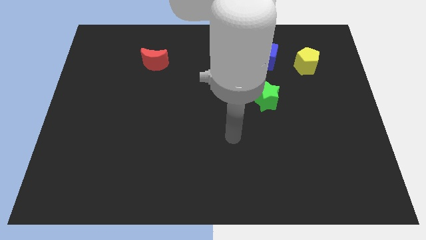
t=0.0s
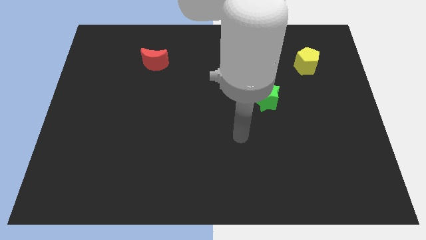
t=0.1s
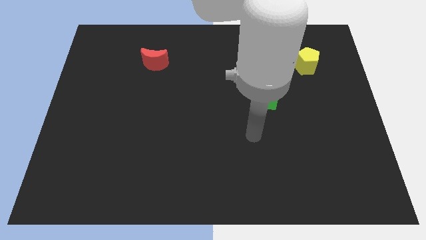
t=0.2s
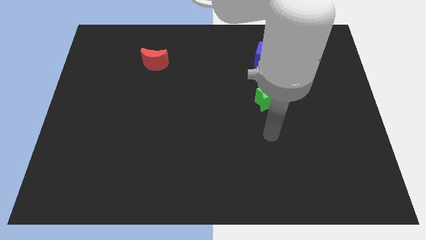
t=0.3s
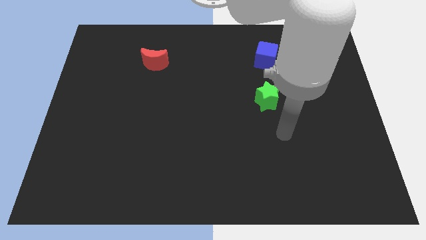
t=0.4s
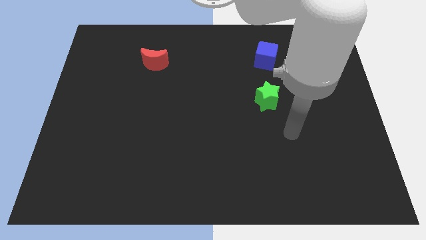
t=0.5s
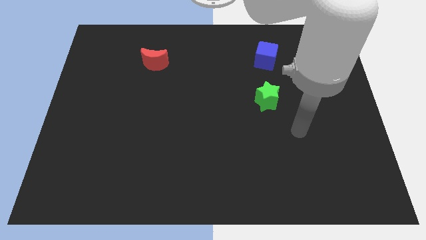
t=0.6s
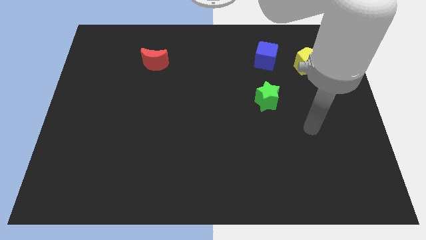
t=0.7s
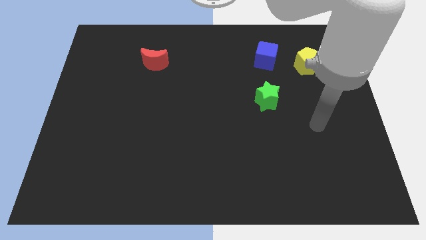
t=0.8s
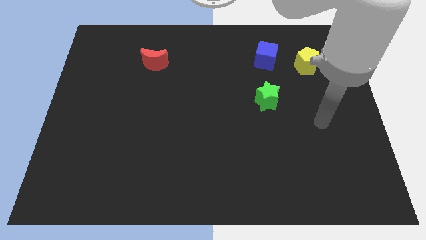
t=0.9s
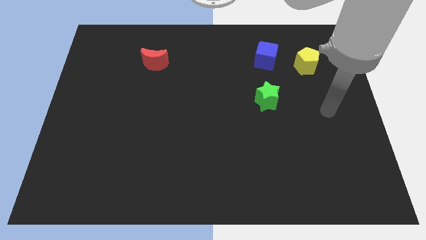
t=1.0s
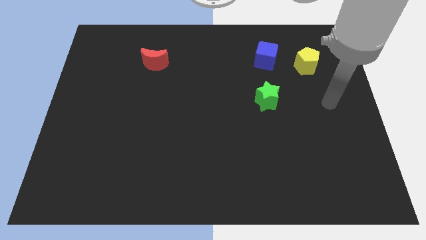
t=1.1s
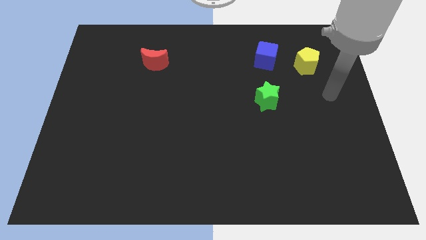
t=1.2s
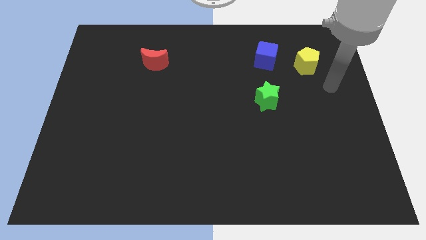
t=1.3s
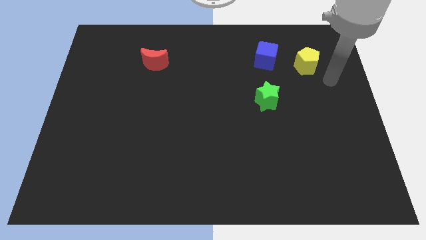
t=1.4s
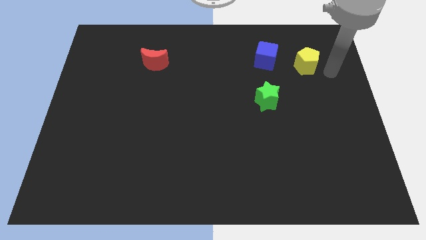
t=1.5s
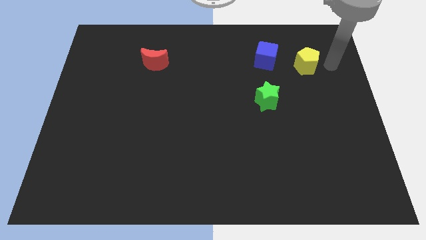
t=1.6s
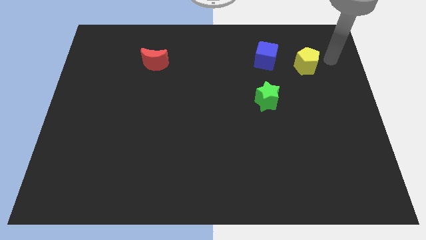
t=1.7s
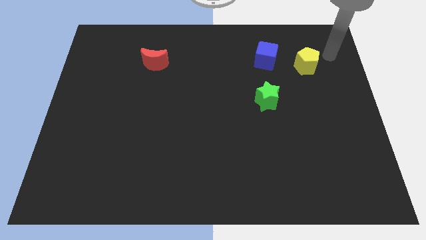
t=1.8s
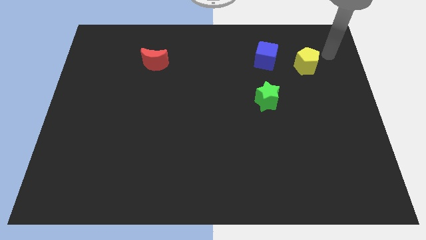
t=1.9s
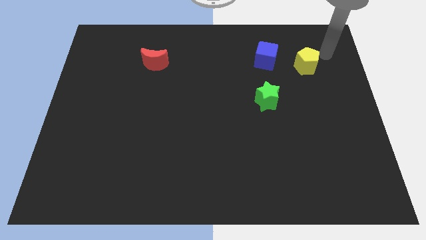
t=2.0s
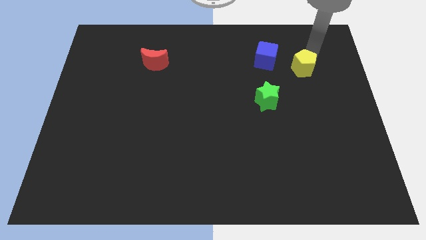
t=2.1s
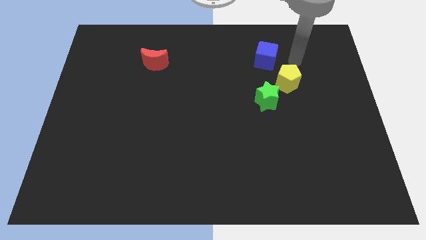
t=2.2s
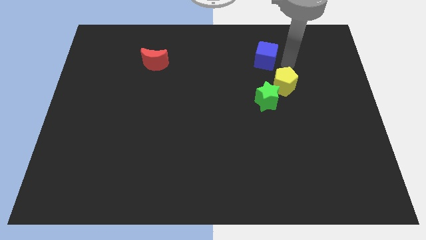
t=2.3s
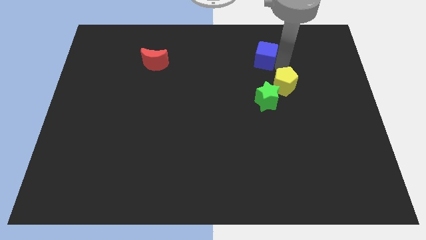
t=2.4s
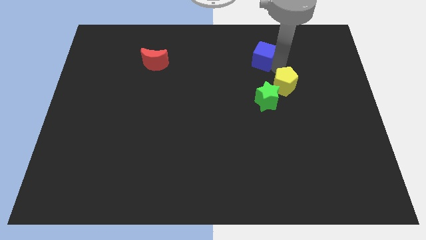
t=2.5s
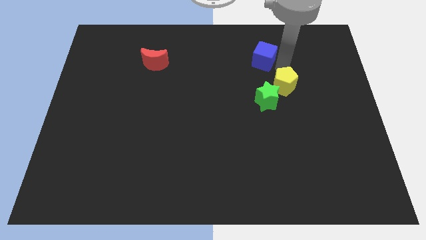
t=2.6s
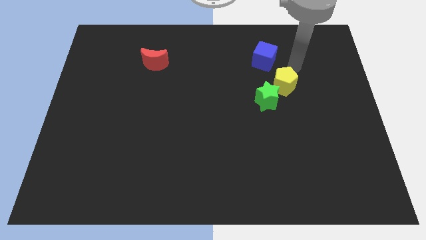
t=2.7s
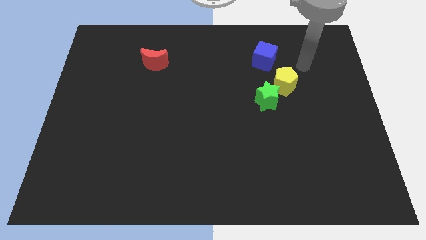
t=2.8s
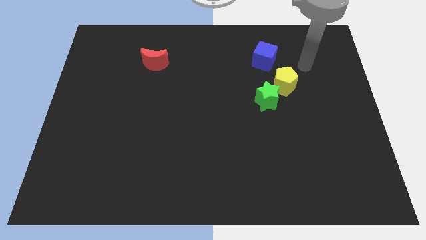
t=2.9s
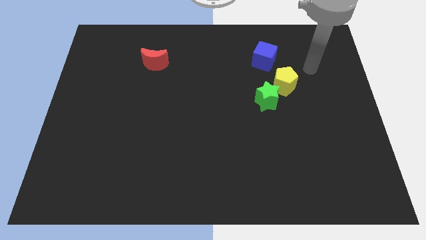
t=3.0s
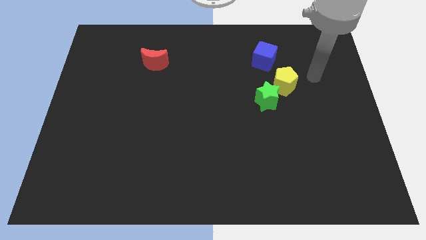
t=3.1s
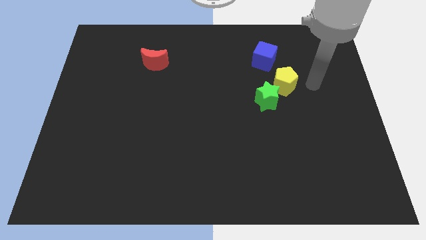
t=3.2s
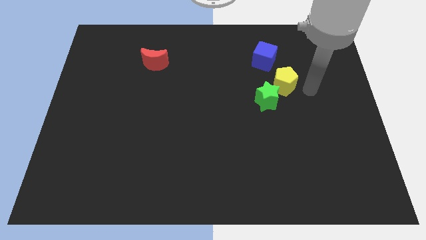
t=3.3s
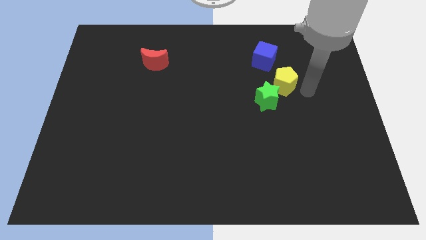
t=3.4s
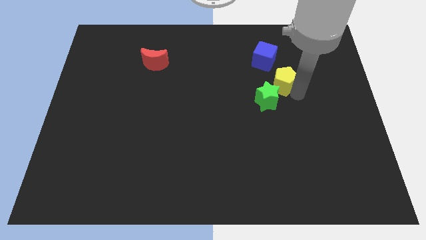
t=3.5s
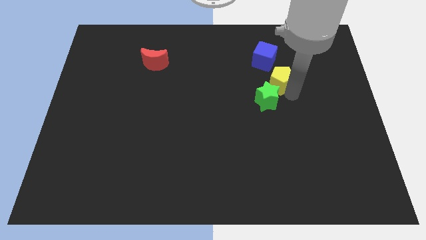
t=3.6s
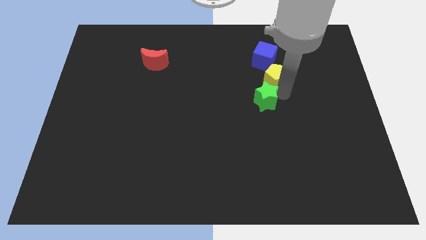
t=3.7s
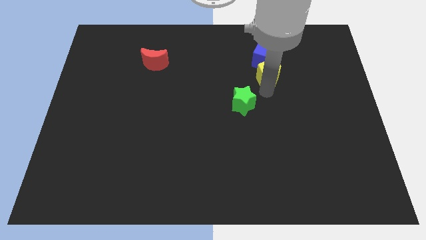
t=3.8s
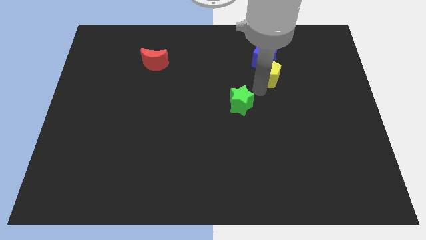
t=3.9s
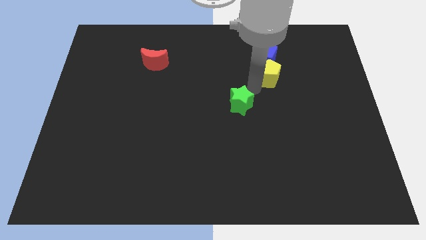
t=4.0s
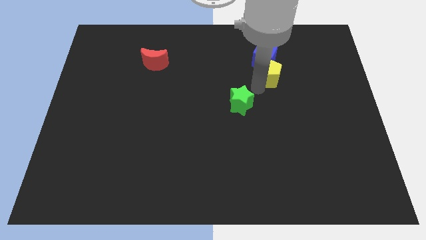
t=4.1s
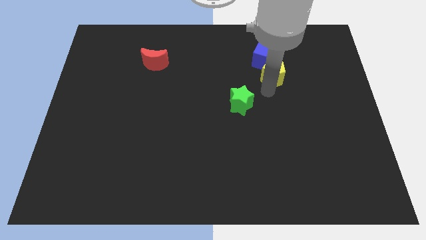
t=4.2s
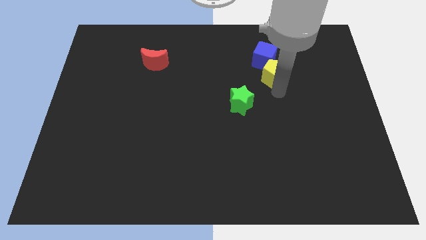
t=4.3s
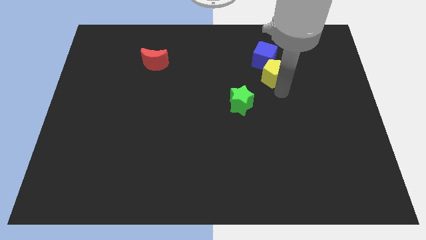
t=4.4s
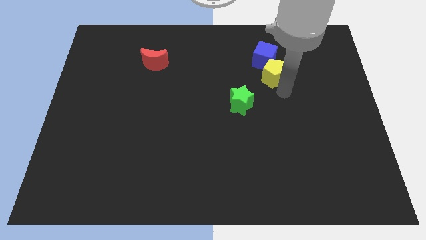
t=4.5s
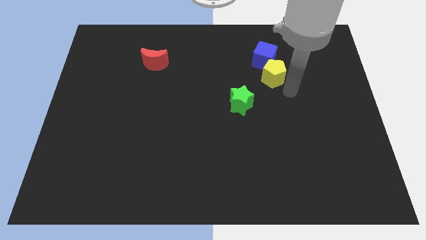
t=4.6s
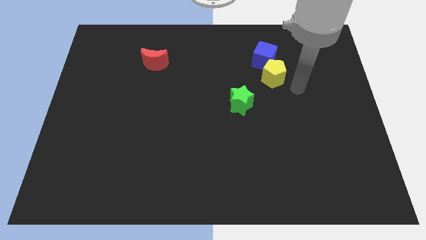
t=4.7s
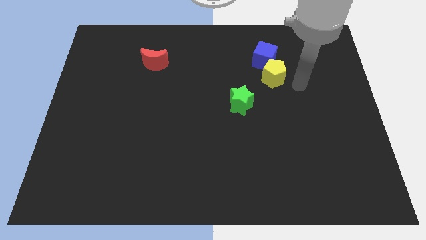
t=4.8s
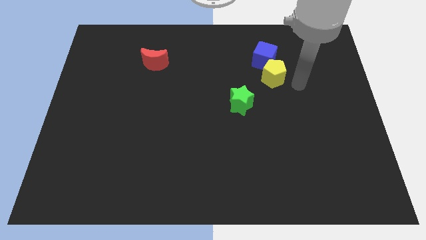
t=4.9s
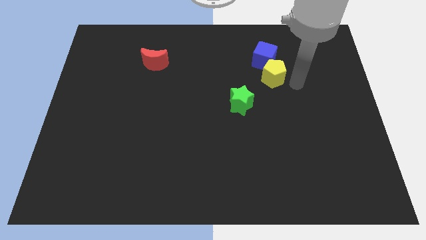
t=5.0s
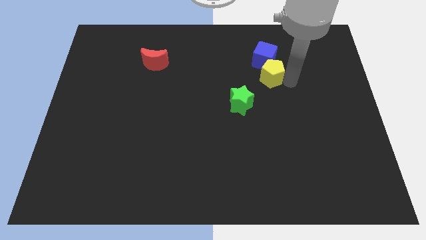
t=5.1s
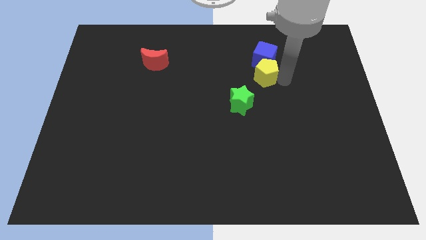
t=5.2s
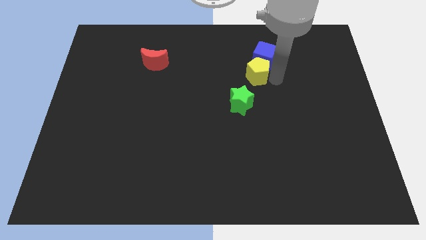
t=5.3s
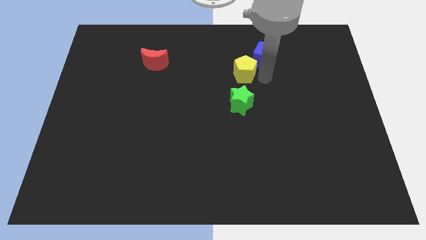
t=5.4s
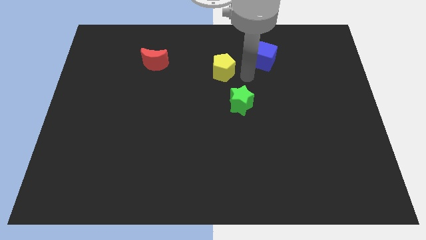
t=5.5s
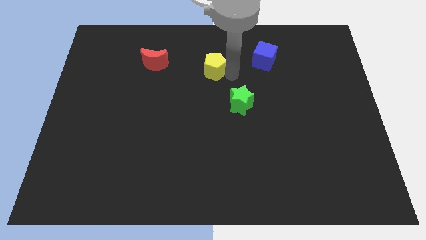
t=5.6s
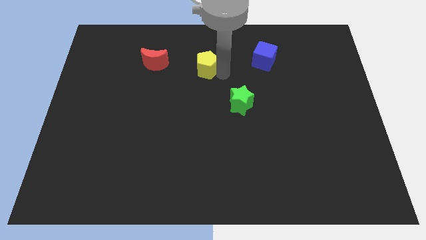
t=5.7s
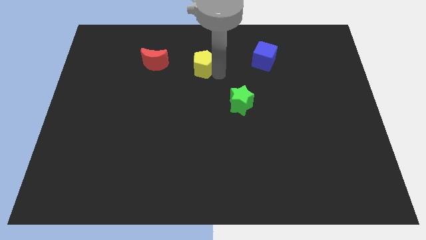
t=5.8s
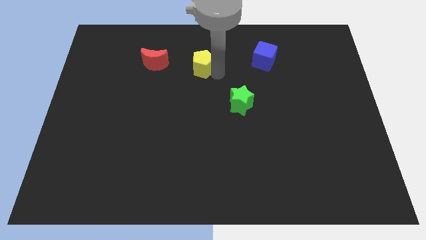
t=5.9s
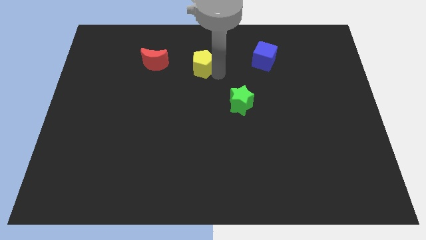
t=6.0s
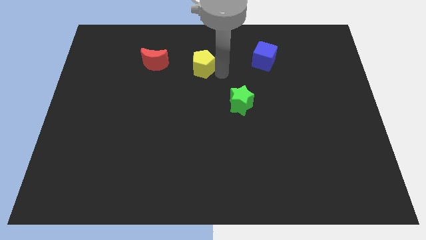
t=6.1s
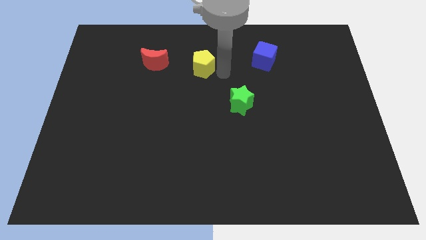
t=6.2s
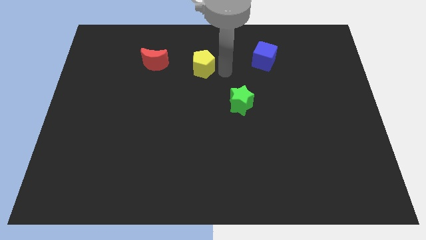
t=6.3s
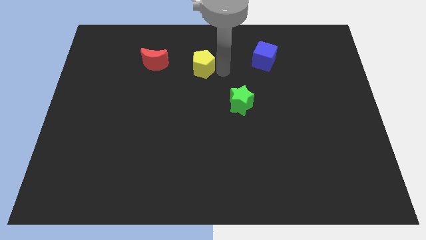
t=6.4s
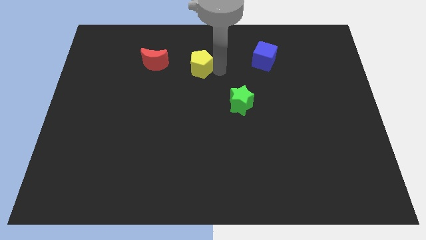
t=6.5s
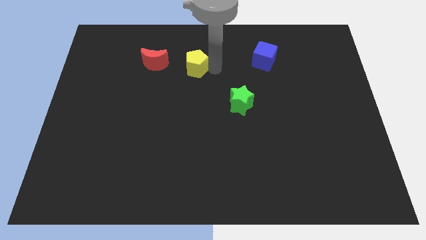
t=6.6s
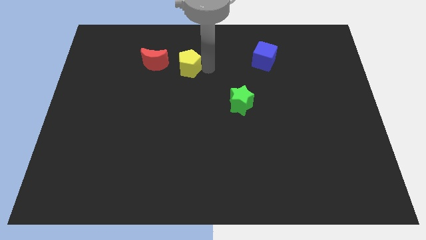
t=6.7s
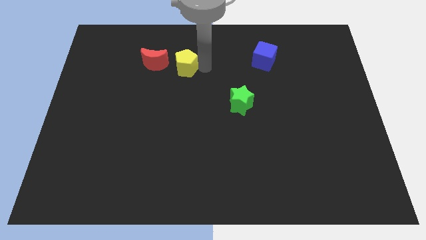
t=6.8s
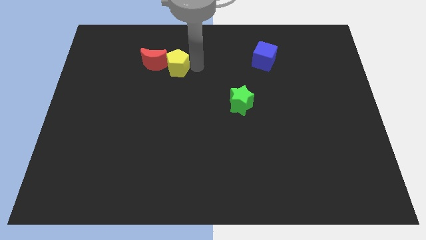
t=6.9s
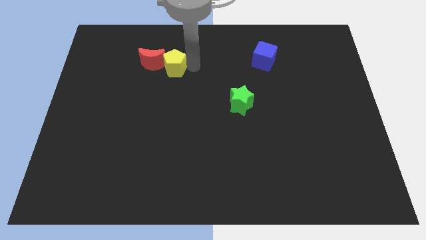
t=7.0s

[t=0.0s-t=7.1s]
put the yellow block towards the moon

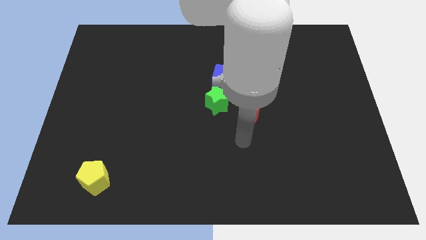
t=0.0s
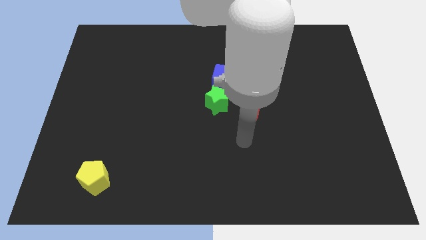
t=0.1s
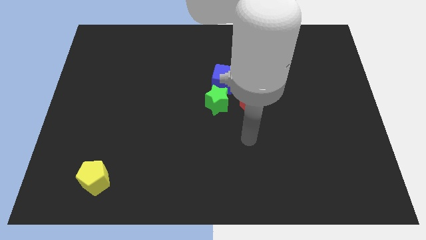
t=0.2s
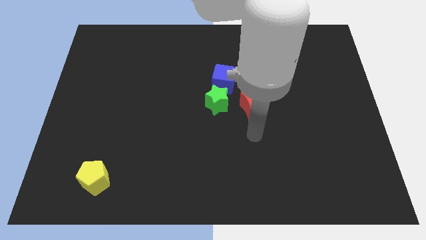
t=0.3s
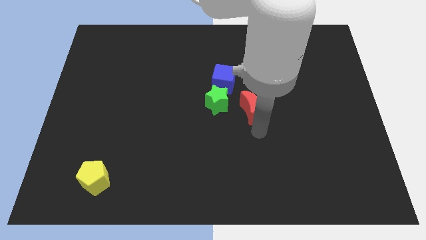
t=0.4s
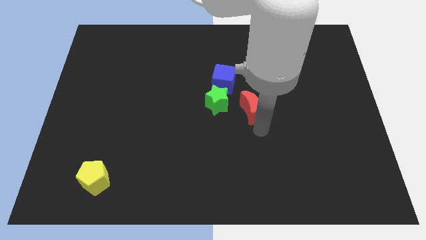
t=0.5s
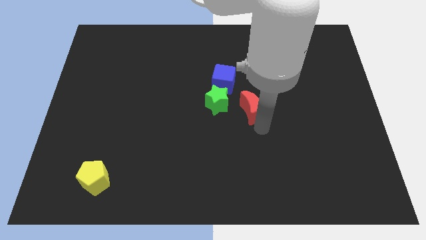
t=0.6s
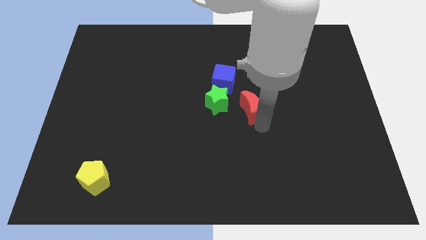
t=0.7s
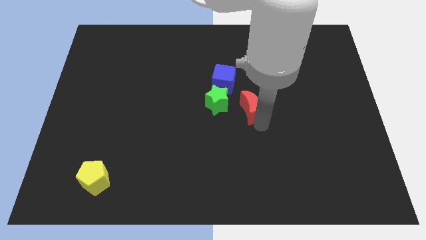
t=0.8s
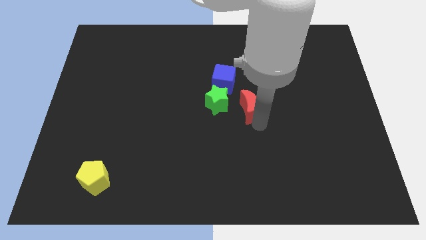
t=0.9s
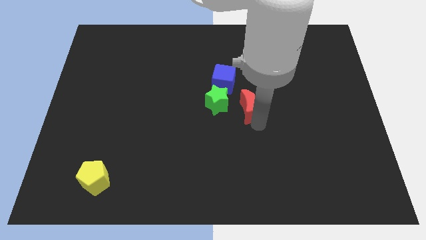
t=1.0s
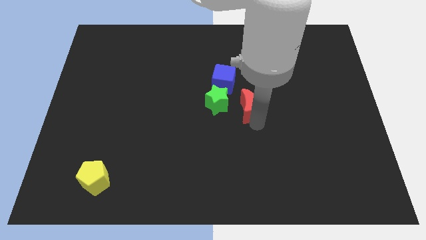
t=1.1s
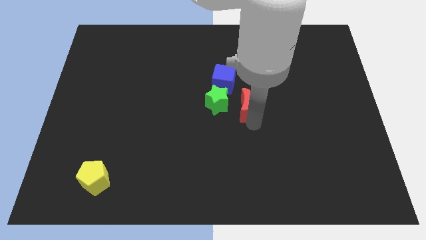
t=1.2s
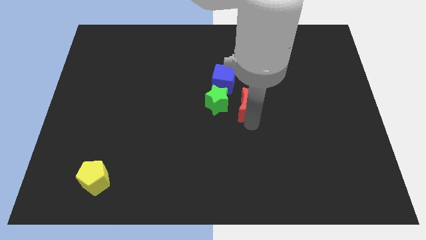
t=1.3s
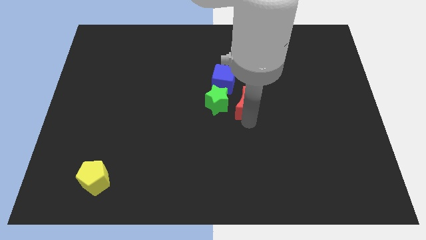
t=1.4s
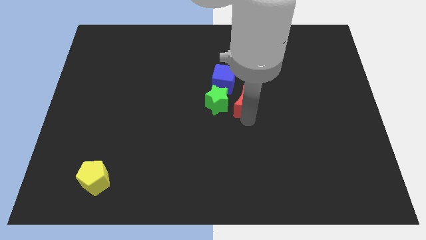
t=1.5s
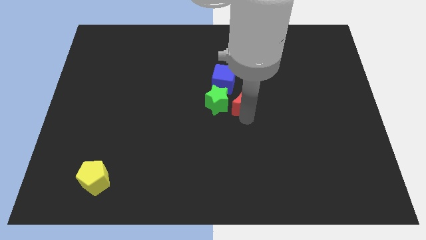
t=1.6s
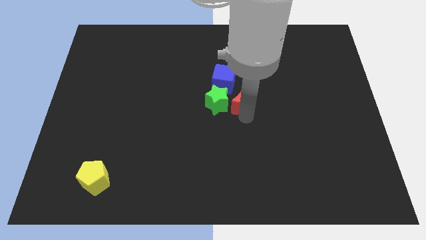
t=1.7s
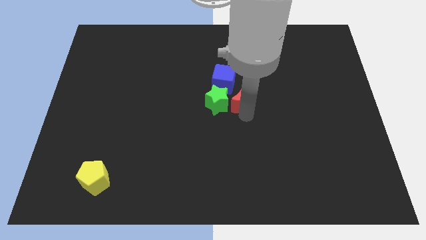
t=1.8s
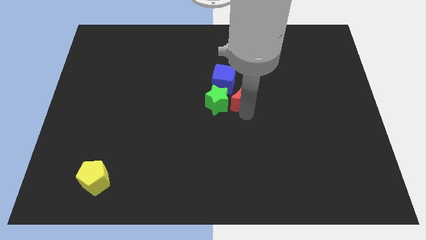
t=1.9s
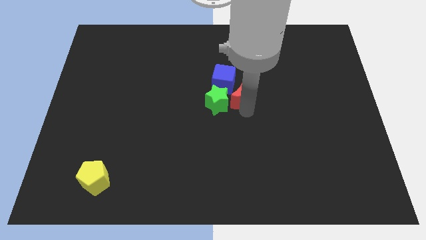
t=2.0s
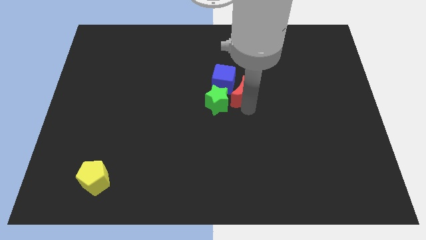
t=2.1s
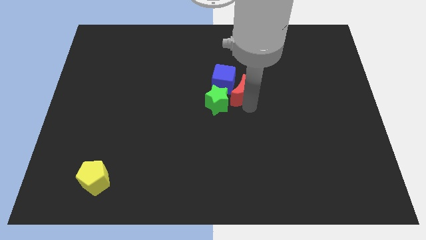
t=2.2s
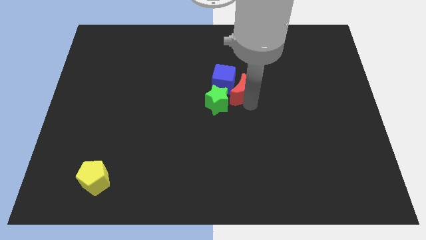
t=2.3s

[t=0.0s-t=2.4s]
put the red block to the blue cube
